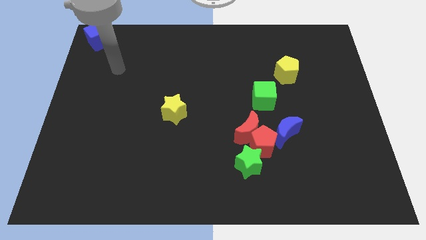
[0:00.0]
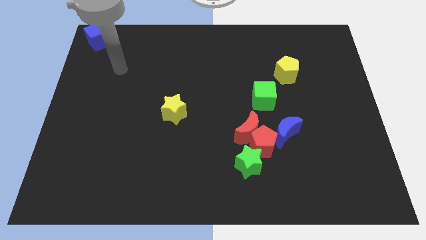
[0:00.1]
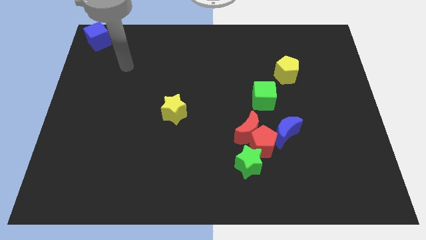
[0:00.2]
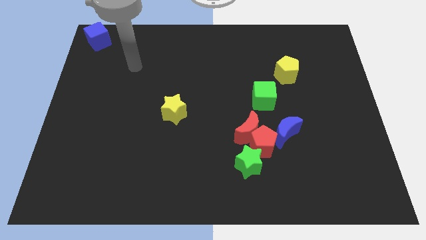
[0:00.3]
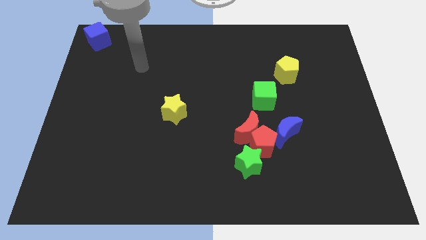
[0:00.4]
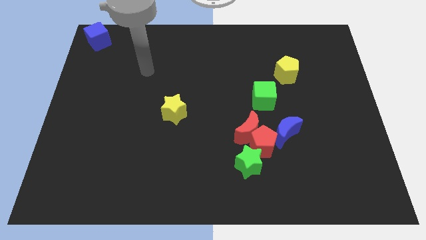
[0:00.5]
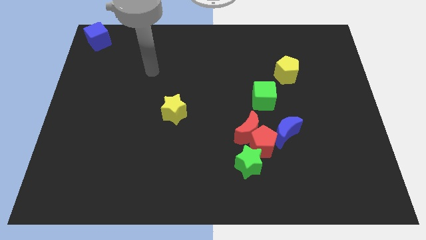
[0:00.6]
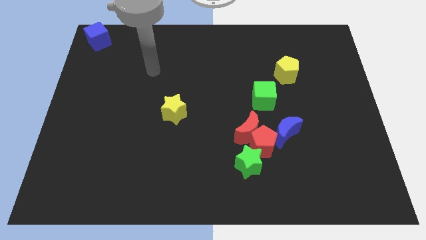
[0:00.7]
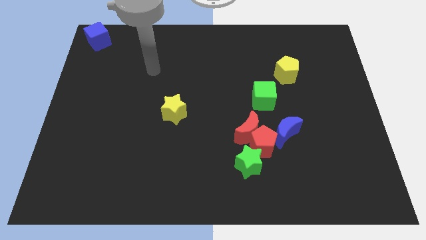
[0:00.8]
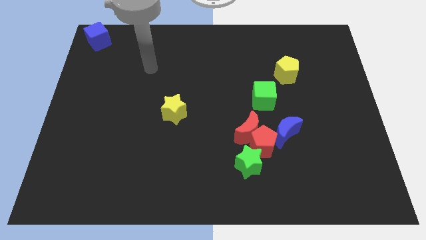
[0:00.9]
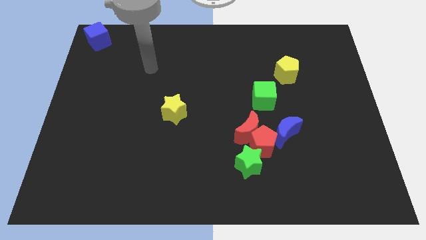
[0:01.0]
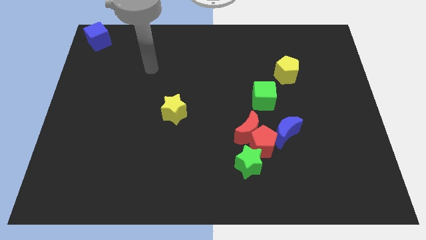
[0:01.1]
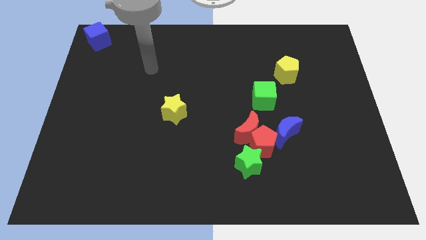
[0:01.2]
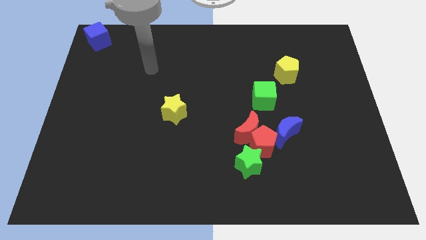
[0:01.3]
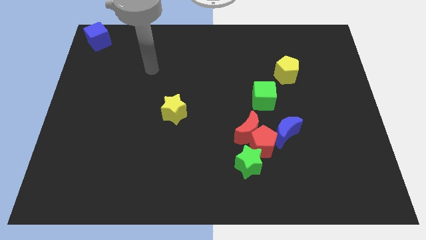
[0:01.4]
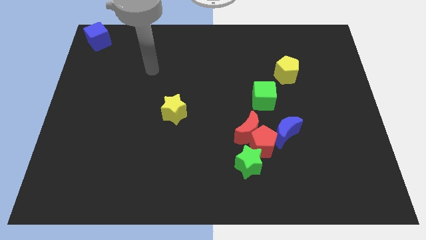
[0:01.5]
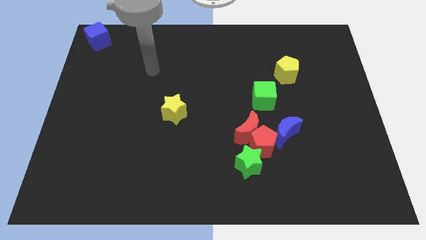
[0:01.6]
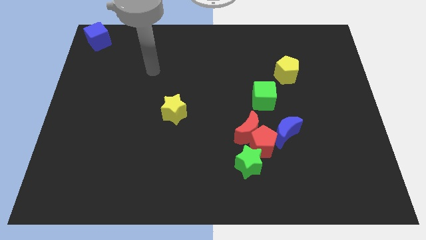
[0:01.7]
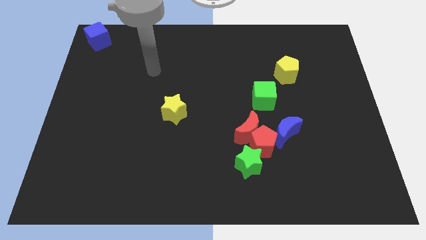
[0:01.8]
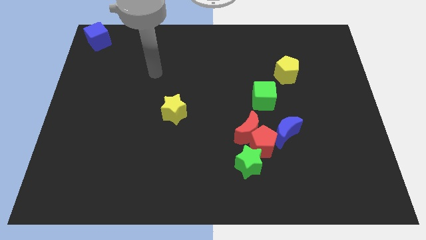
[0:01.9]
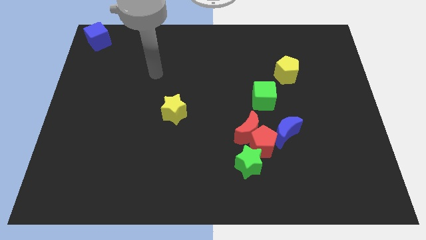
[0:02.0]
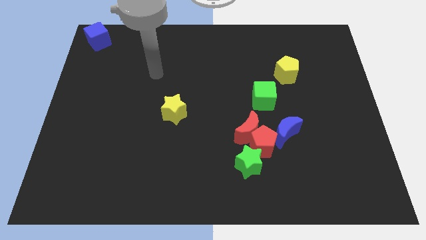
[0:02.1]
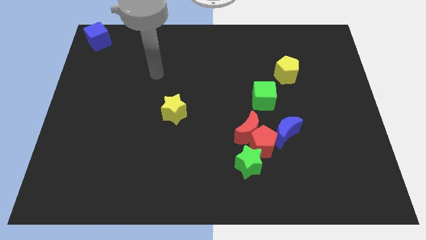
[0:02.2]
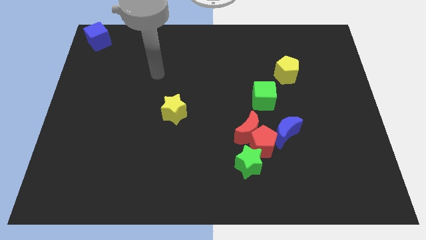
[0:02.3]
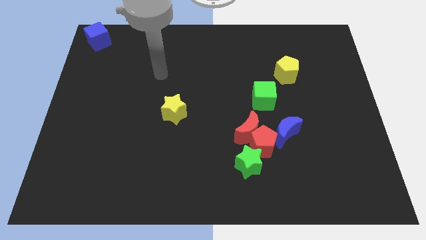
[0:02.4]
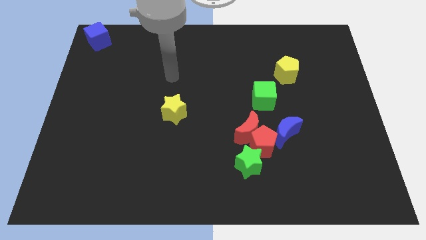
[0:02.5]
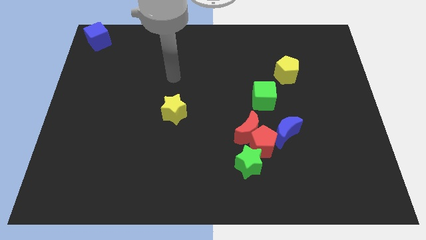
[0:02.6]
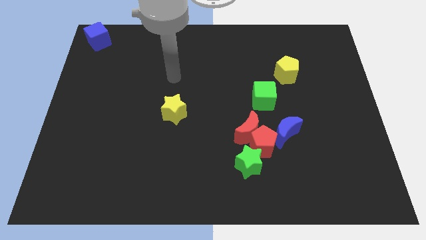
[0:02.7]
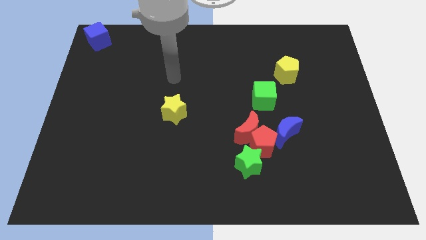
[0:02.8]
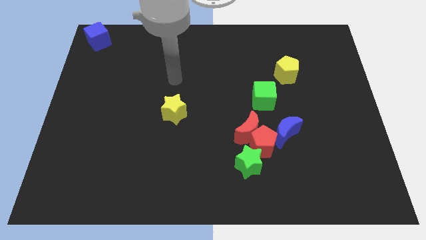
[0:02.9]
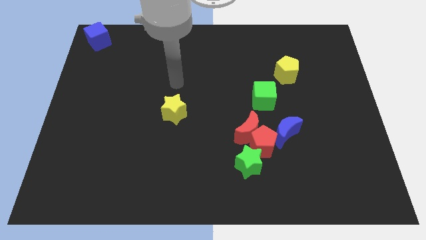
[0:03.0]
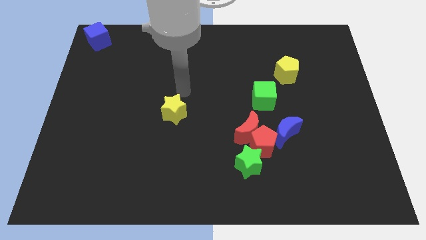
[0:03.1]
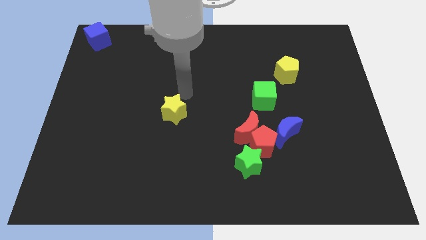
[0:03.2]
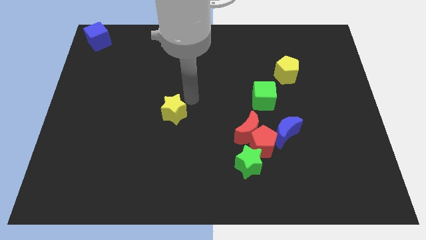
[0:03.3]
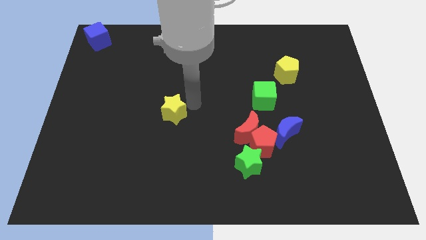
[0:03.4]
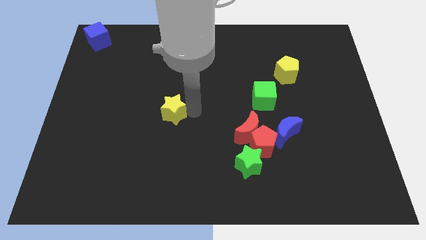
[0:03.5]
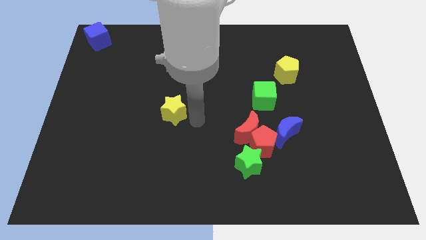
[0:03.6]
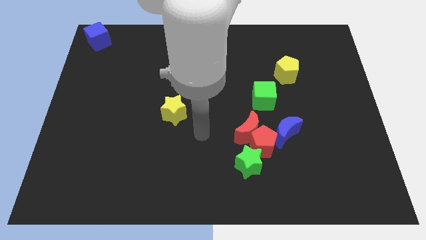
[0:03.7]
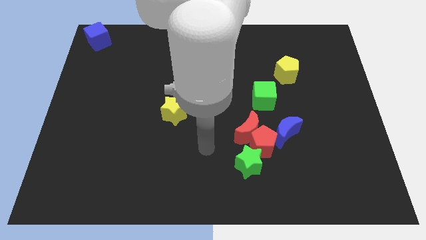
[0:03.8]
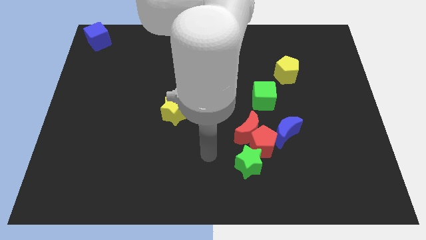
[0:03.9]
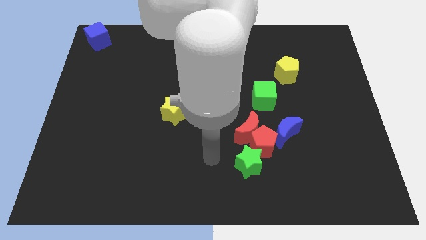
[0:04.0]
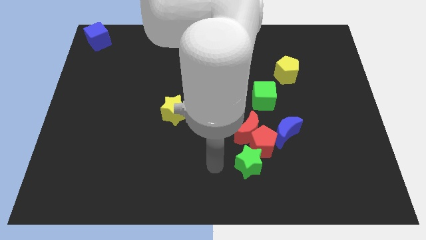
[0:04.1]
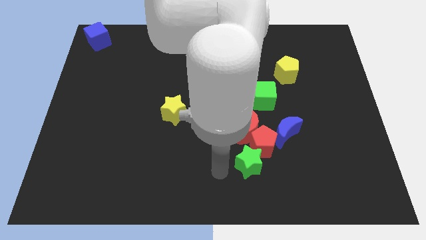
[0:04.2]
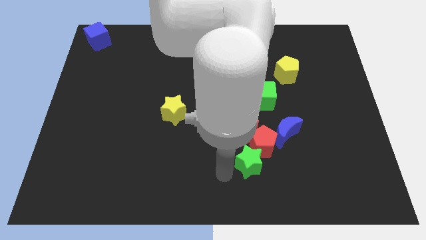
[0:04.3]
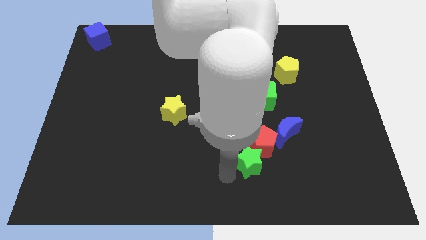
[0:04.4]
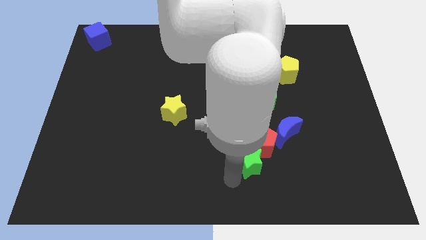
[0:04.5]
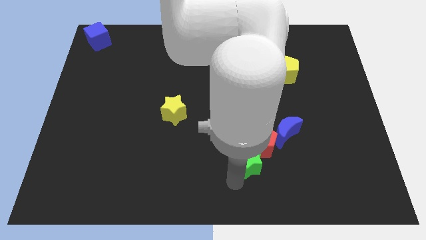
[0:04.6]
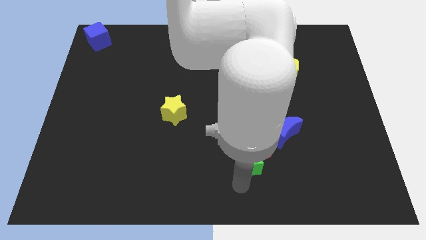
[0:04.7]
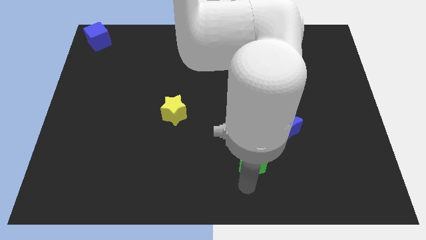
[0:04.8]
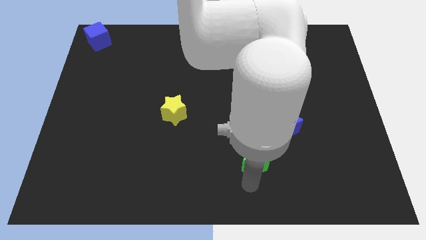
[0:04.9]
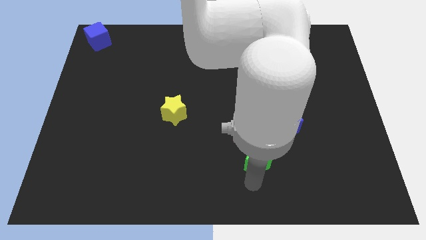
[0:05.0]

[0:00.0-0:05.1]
move your arm below the green star

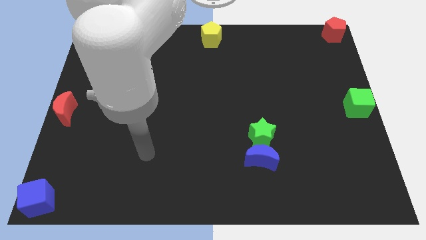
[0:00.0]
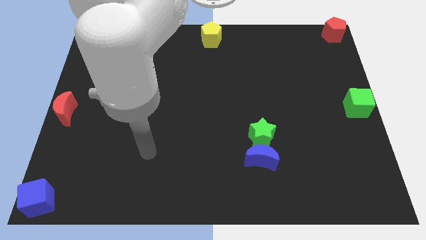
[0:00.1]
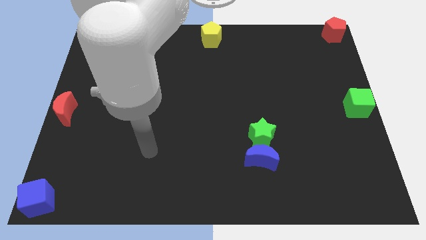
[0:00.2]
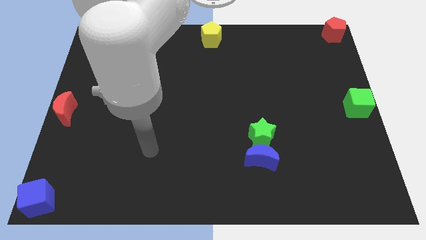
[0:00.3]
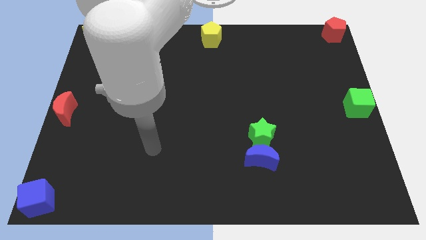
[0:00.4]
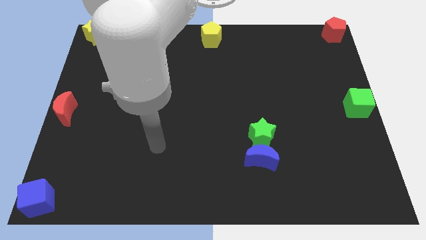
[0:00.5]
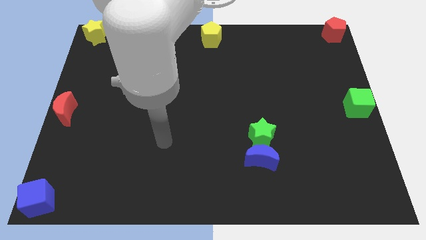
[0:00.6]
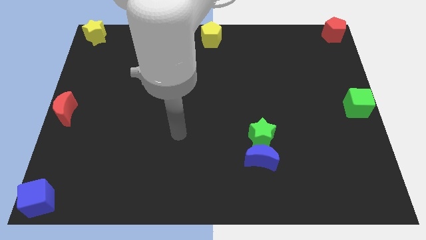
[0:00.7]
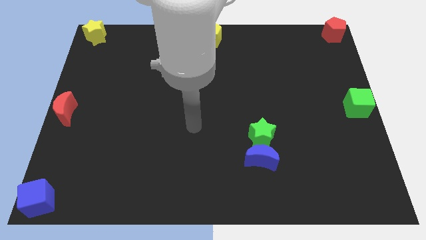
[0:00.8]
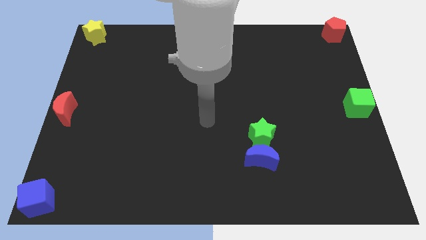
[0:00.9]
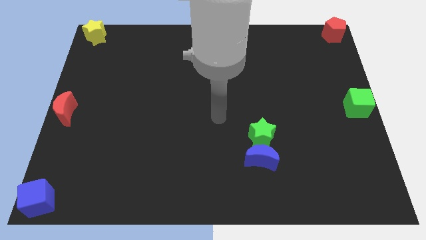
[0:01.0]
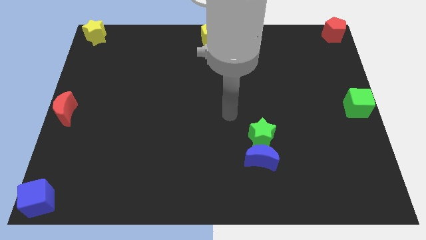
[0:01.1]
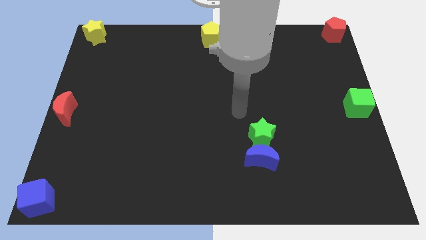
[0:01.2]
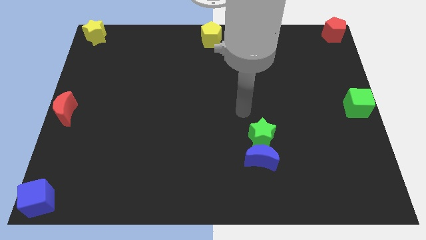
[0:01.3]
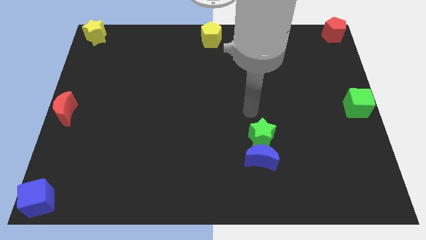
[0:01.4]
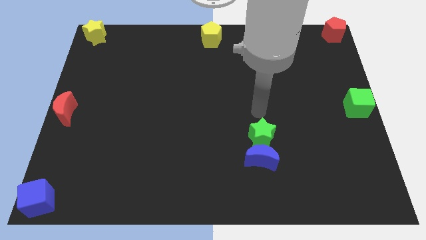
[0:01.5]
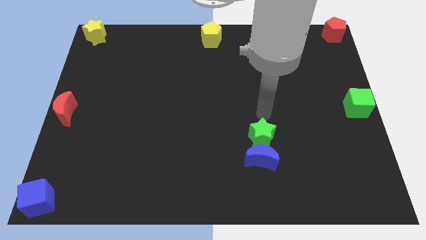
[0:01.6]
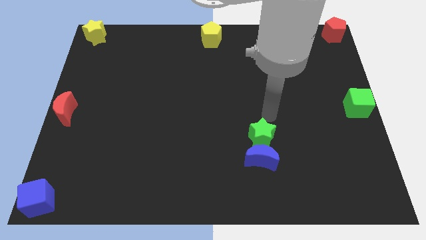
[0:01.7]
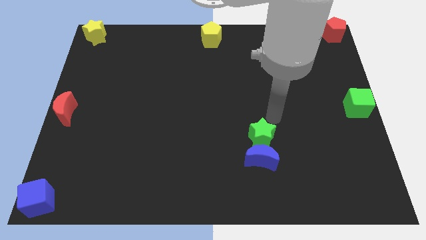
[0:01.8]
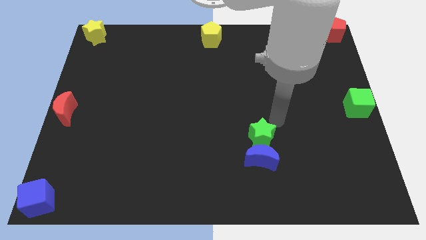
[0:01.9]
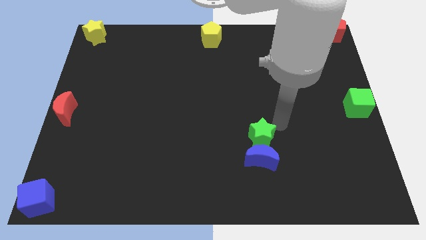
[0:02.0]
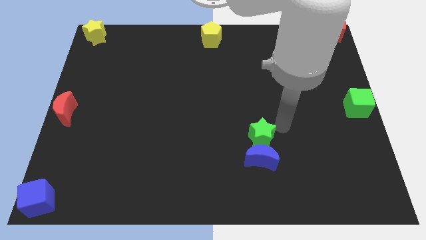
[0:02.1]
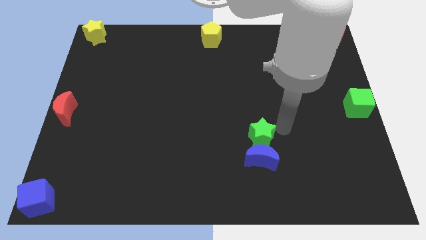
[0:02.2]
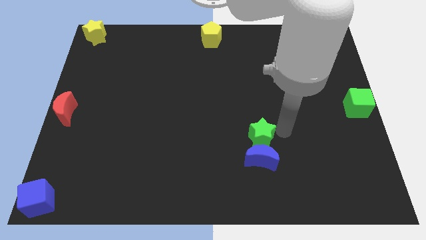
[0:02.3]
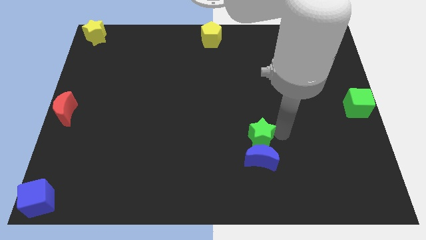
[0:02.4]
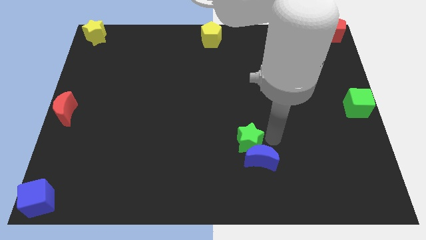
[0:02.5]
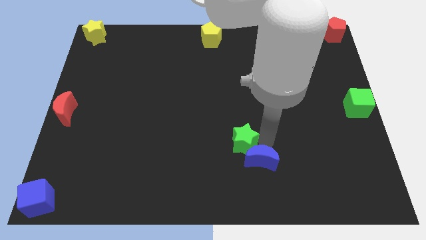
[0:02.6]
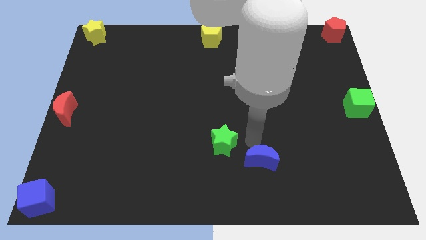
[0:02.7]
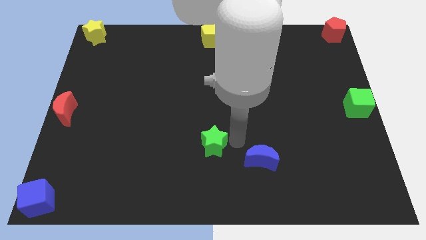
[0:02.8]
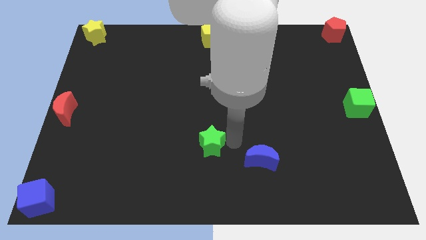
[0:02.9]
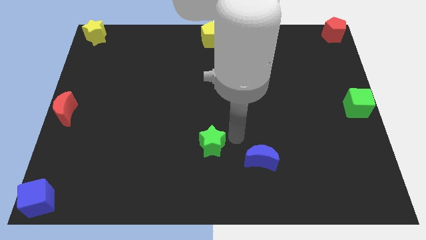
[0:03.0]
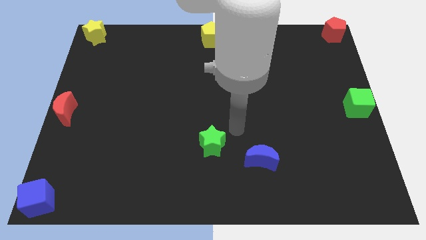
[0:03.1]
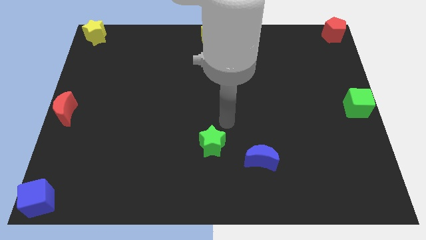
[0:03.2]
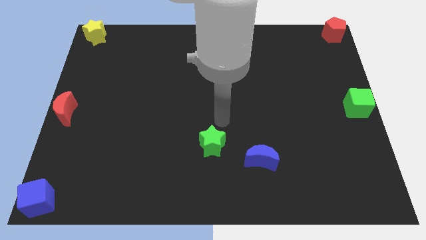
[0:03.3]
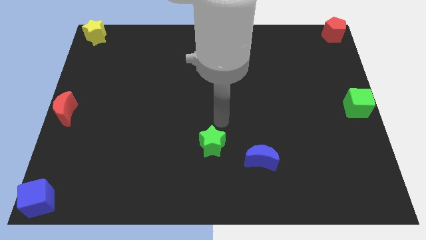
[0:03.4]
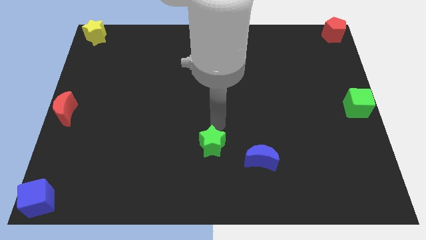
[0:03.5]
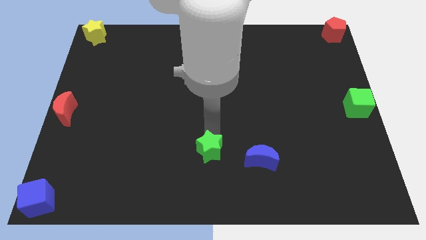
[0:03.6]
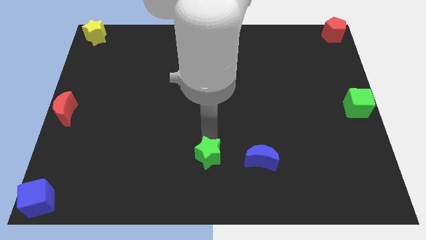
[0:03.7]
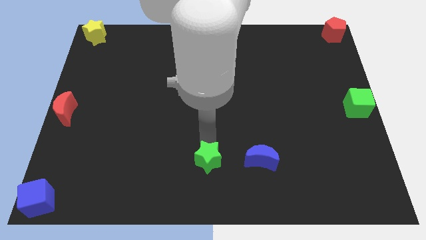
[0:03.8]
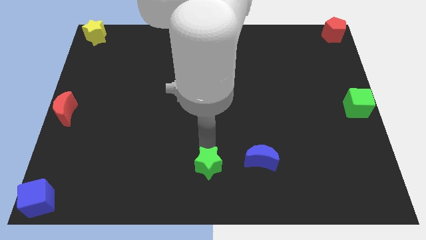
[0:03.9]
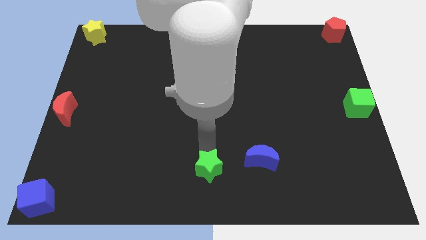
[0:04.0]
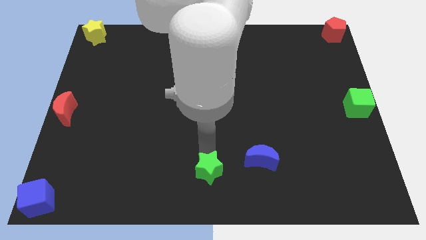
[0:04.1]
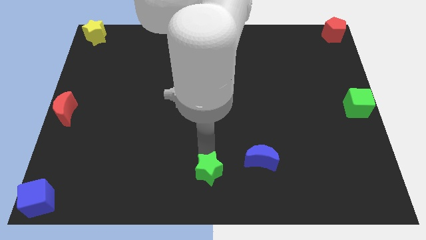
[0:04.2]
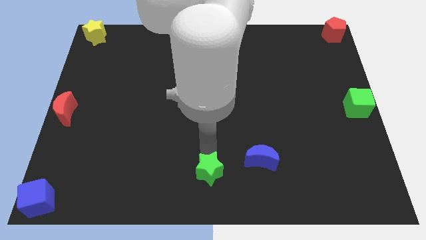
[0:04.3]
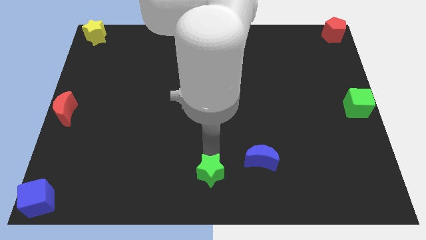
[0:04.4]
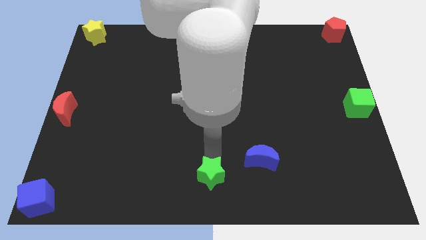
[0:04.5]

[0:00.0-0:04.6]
move the green star towards the bottom center
